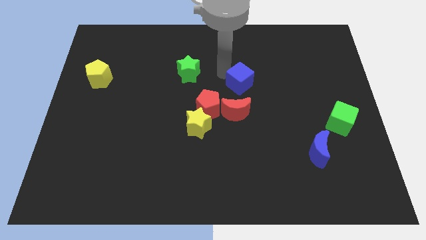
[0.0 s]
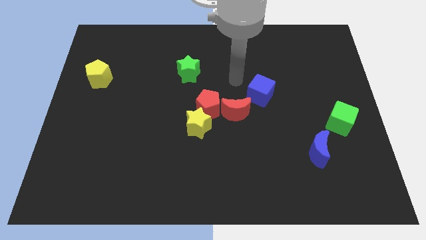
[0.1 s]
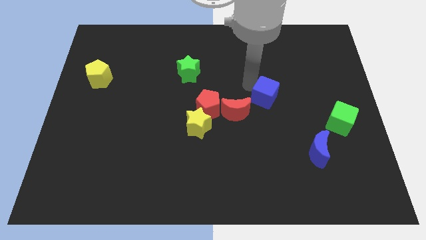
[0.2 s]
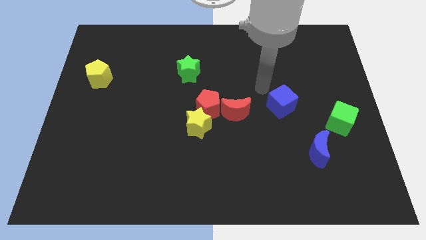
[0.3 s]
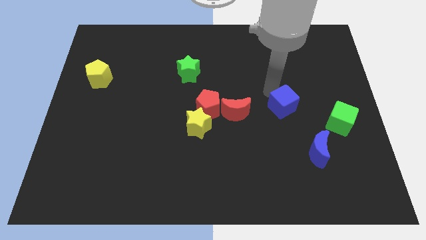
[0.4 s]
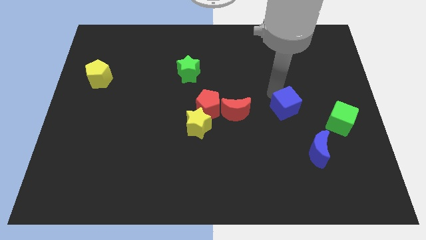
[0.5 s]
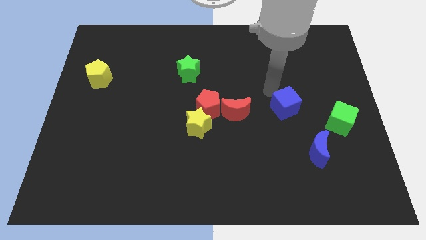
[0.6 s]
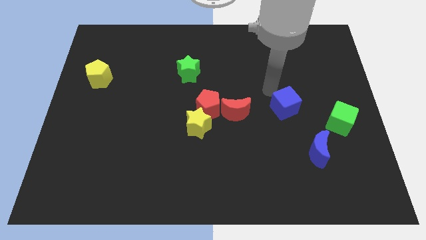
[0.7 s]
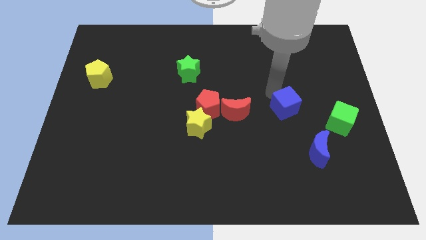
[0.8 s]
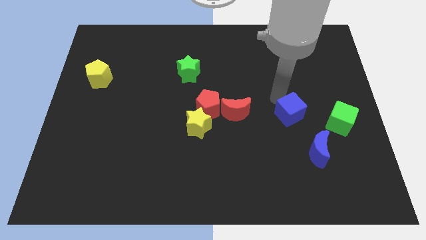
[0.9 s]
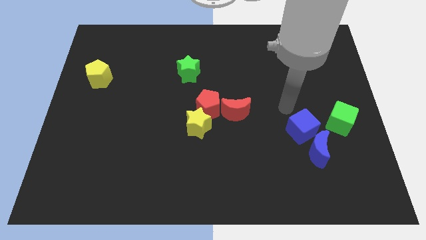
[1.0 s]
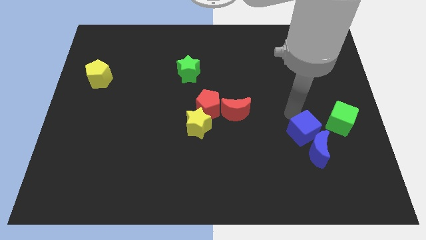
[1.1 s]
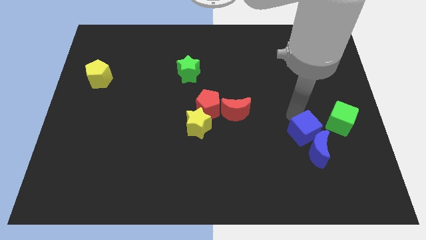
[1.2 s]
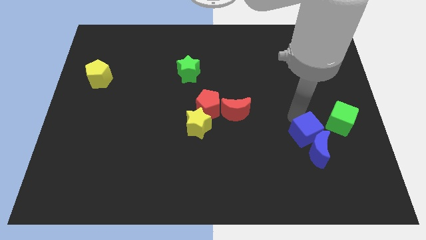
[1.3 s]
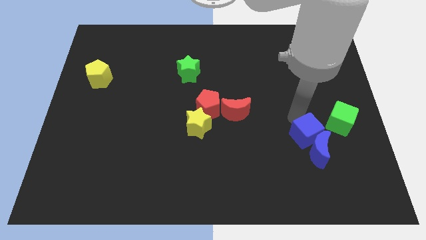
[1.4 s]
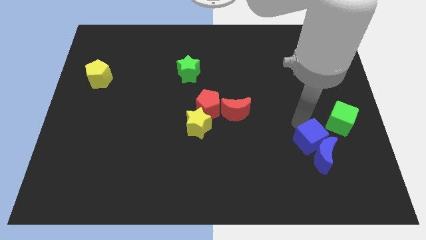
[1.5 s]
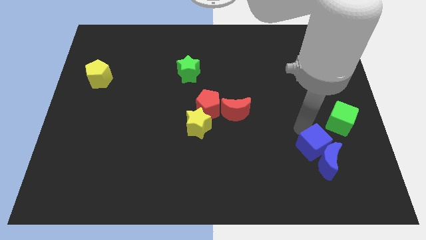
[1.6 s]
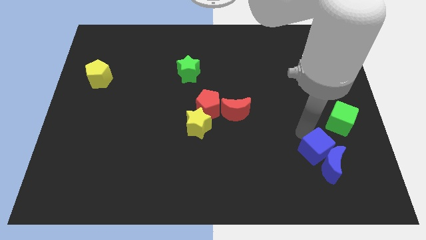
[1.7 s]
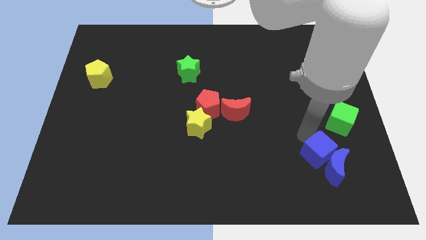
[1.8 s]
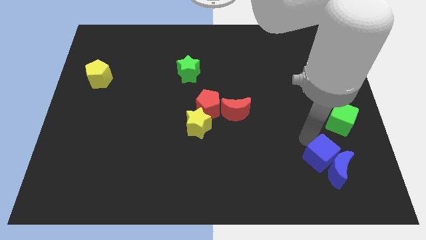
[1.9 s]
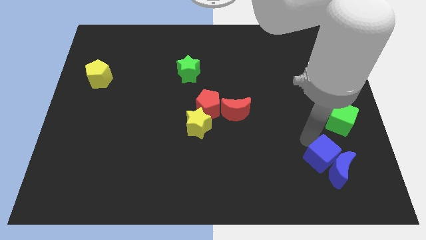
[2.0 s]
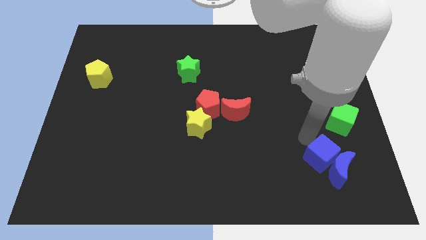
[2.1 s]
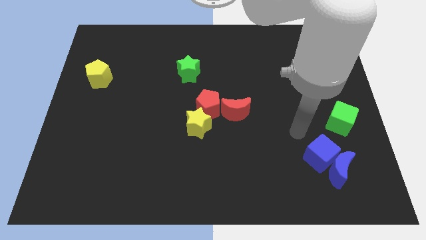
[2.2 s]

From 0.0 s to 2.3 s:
push the blue cube into blue crescent

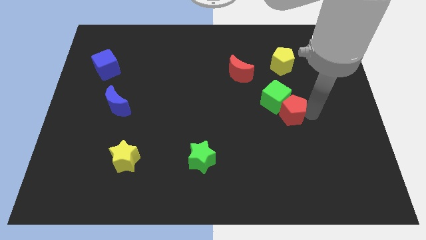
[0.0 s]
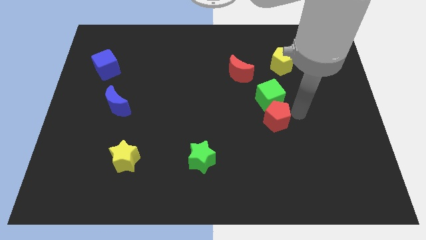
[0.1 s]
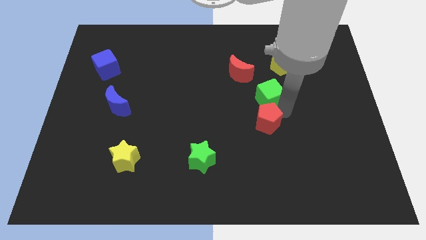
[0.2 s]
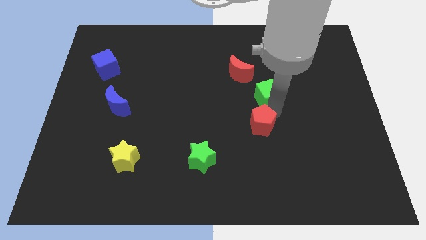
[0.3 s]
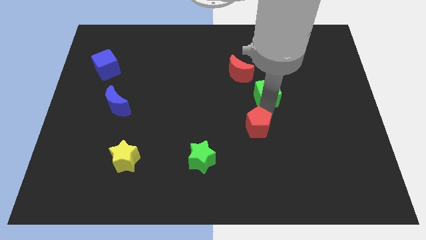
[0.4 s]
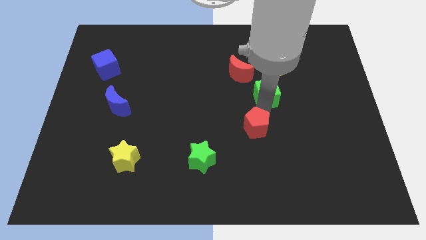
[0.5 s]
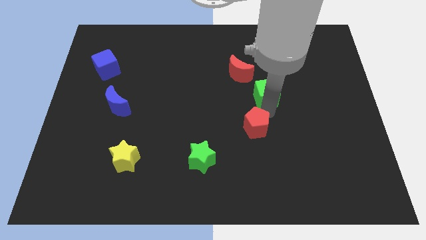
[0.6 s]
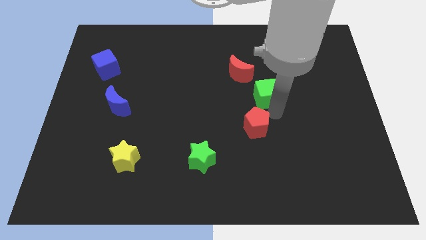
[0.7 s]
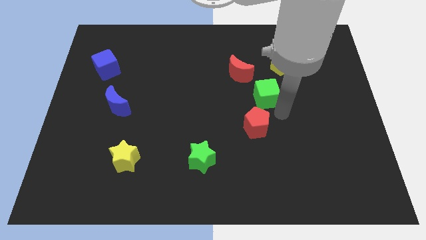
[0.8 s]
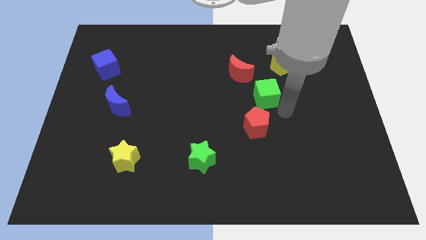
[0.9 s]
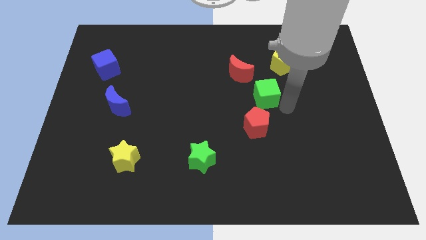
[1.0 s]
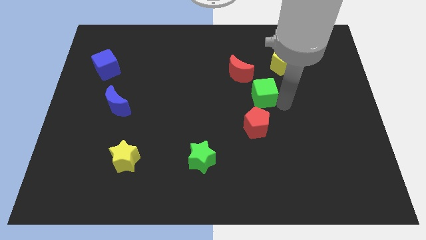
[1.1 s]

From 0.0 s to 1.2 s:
move the red pentagon parallel to the above to the green star

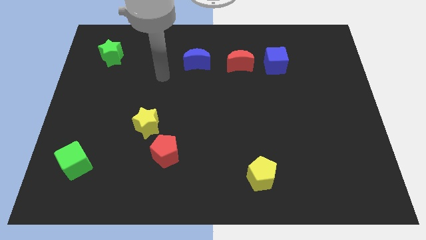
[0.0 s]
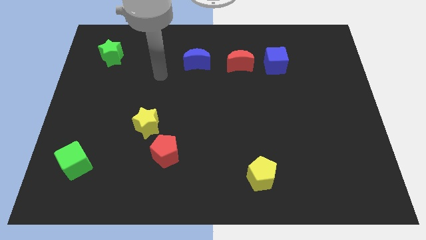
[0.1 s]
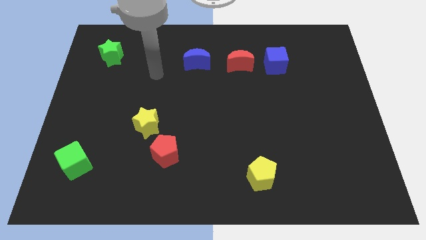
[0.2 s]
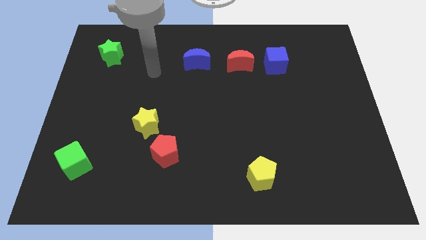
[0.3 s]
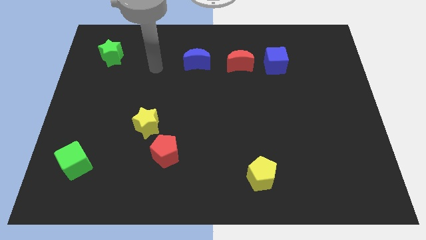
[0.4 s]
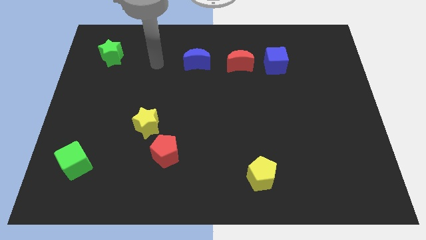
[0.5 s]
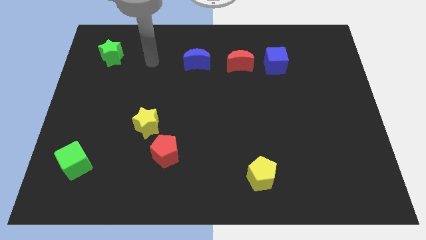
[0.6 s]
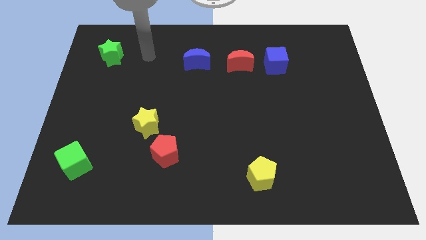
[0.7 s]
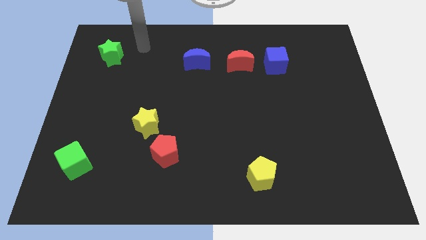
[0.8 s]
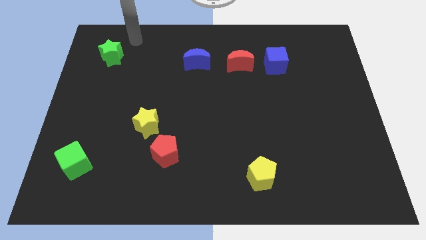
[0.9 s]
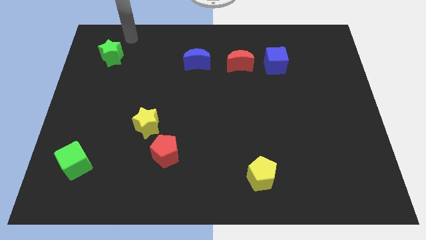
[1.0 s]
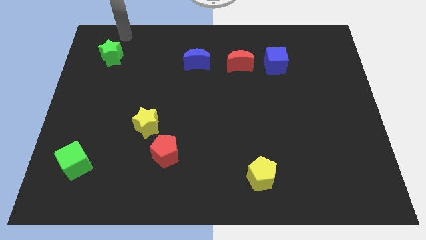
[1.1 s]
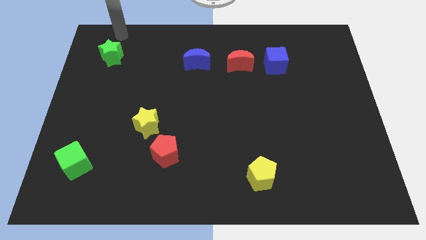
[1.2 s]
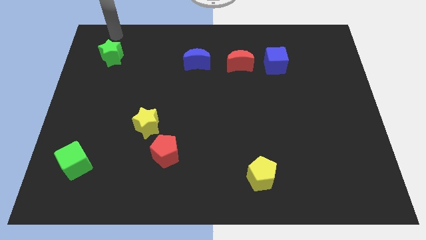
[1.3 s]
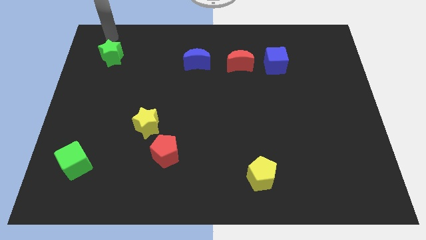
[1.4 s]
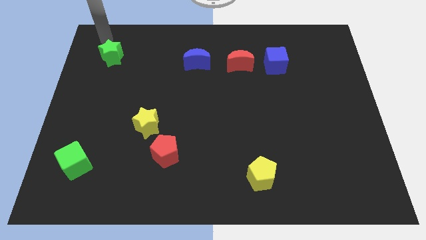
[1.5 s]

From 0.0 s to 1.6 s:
move your arm to the top of the green star

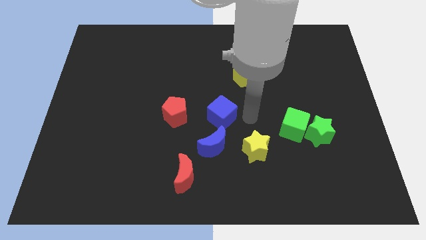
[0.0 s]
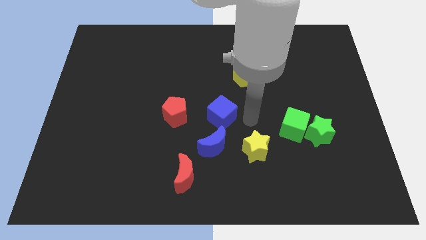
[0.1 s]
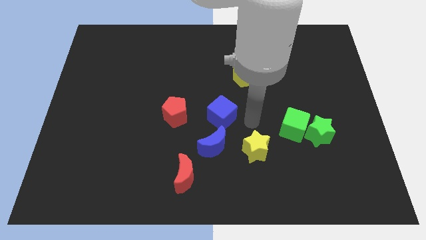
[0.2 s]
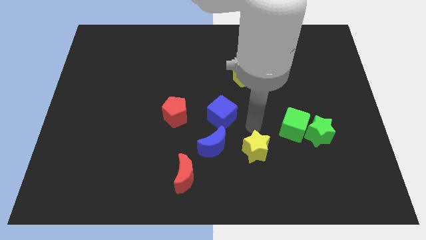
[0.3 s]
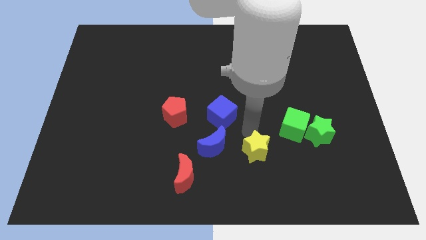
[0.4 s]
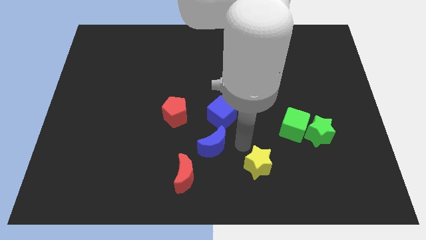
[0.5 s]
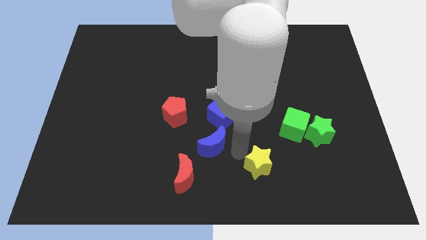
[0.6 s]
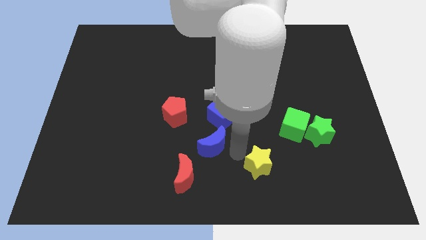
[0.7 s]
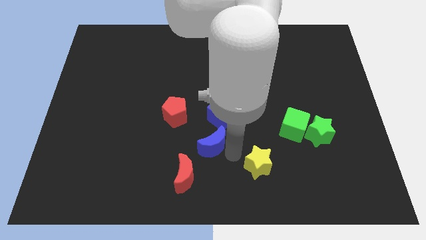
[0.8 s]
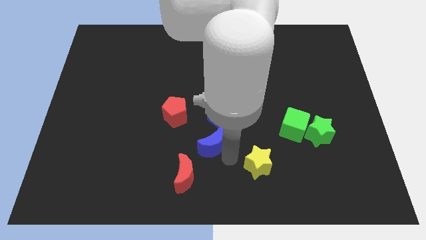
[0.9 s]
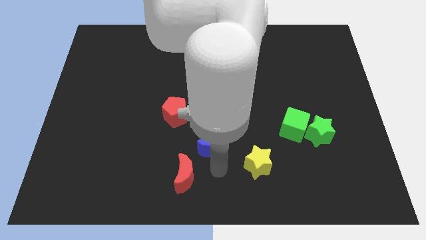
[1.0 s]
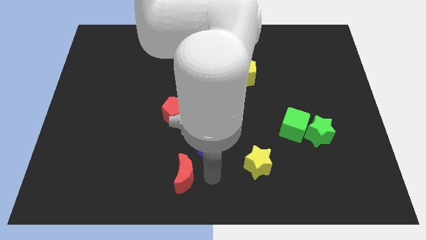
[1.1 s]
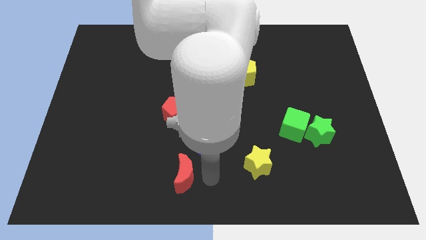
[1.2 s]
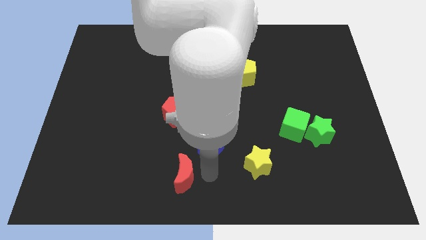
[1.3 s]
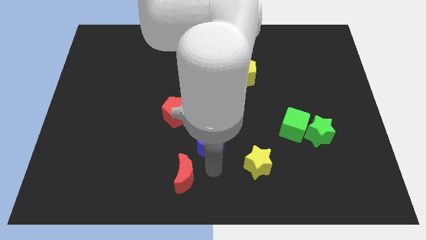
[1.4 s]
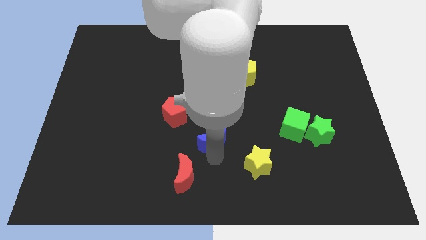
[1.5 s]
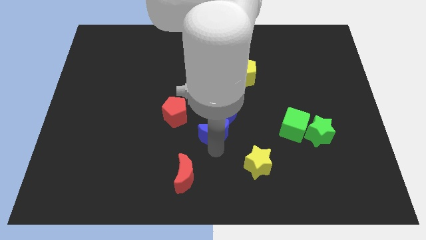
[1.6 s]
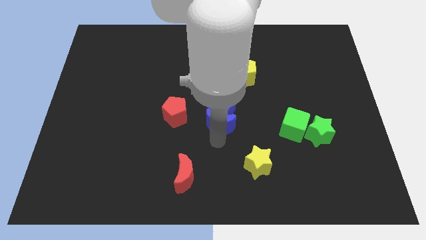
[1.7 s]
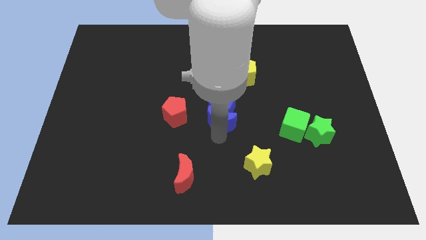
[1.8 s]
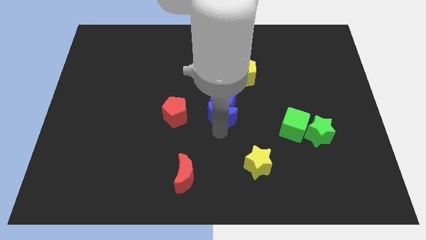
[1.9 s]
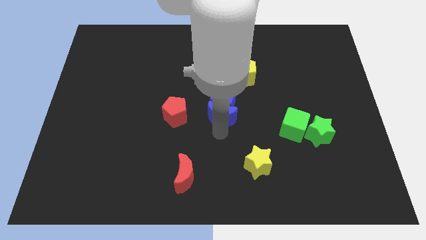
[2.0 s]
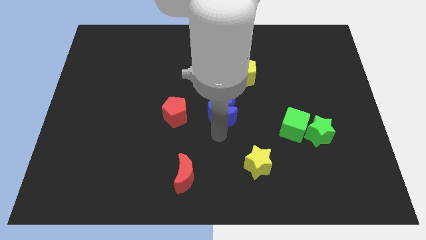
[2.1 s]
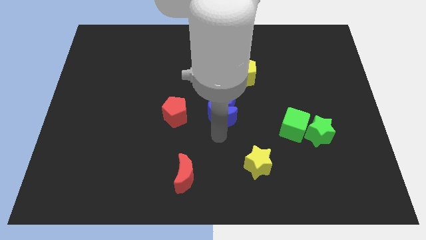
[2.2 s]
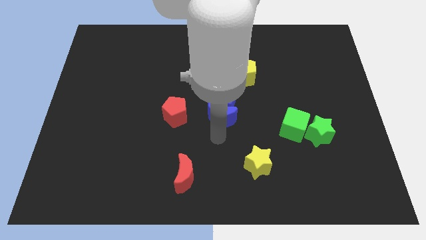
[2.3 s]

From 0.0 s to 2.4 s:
push the yellow star and blue blocks in opposite directions

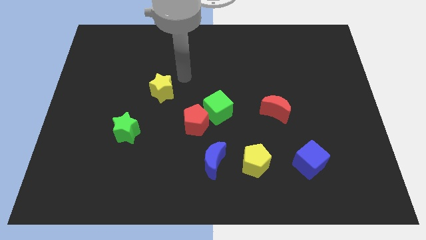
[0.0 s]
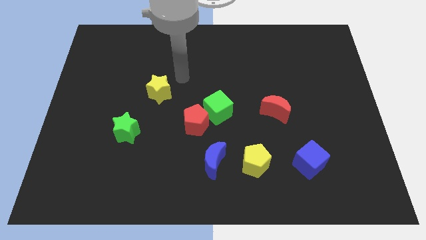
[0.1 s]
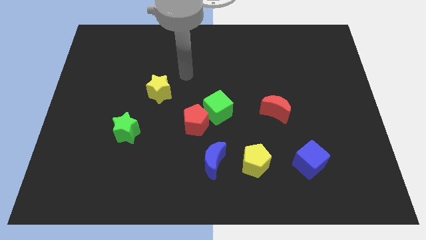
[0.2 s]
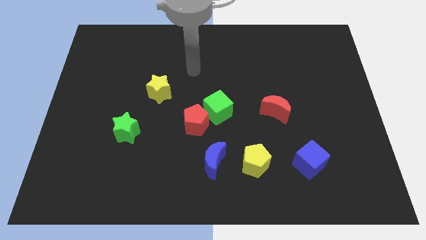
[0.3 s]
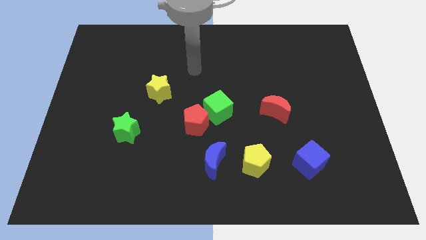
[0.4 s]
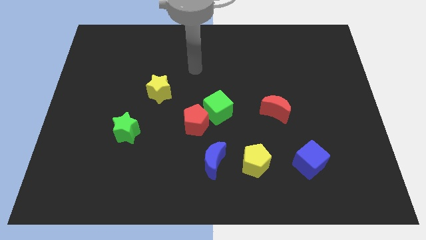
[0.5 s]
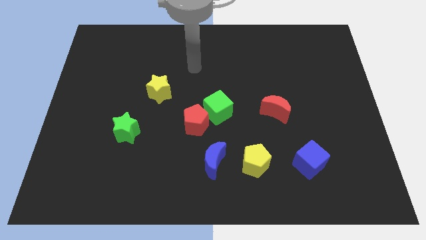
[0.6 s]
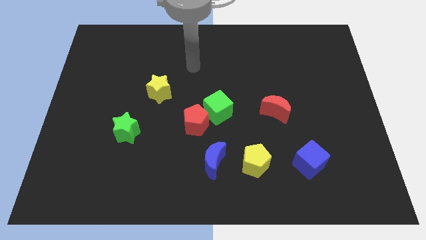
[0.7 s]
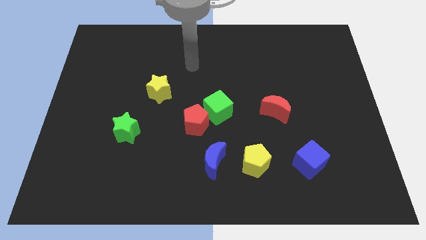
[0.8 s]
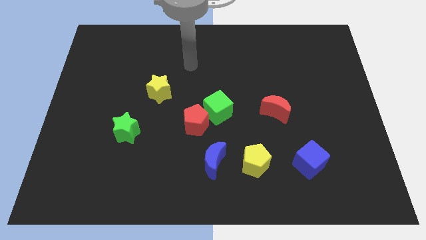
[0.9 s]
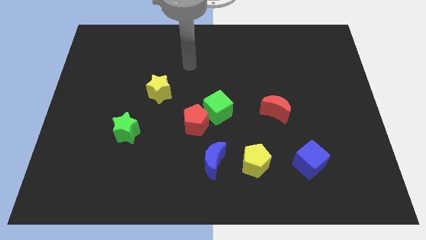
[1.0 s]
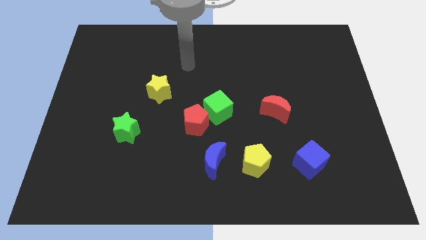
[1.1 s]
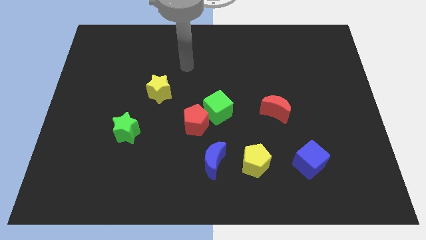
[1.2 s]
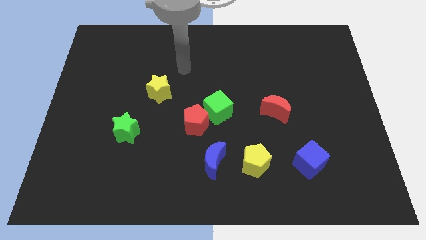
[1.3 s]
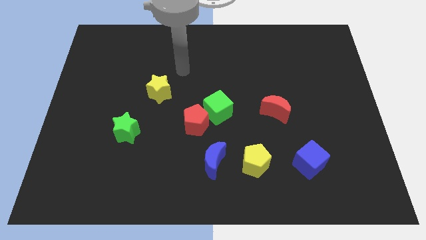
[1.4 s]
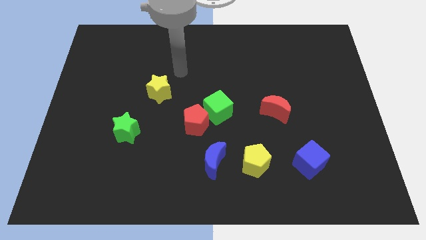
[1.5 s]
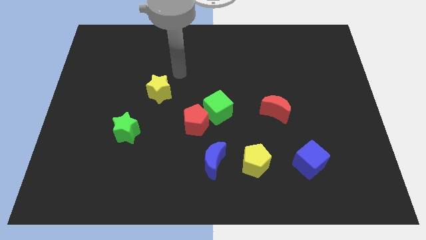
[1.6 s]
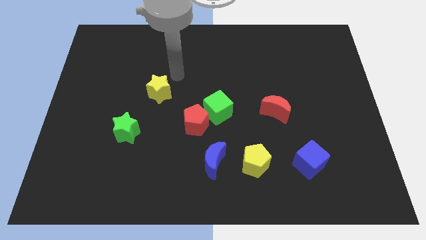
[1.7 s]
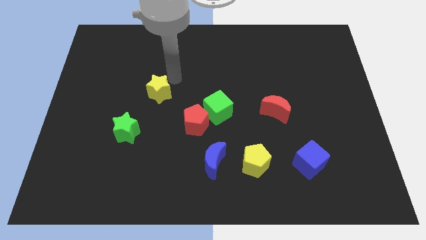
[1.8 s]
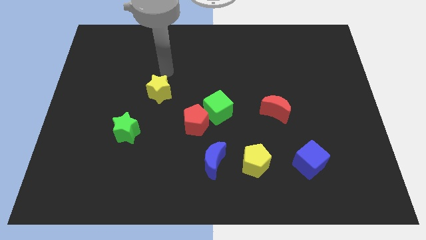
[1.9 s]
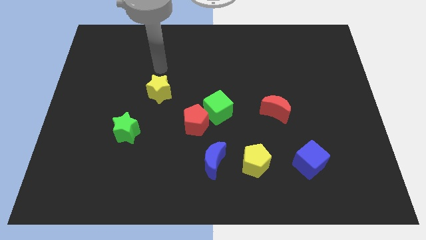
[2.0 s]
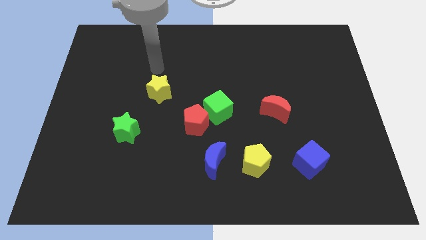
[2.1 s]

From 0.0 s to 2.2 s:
move your arm to the top side of the yellow star
